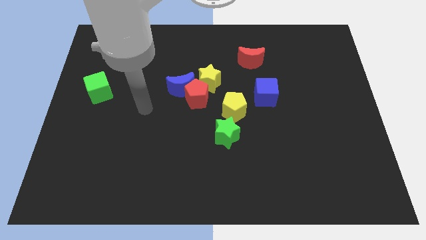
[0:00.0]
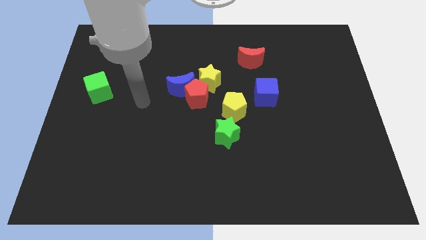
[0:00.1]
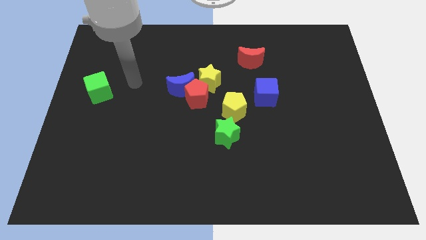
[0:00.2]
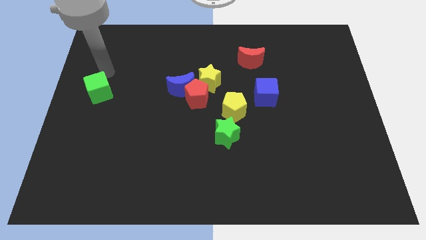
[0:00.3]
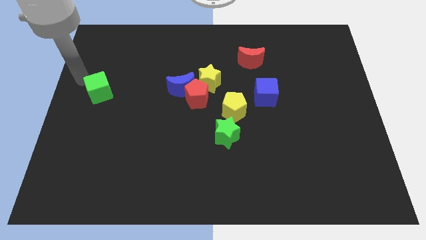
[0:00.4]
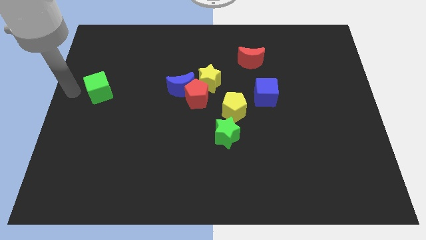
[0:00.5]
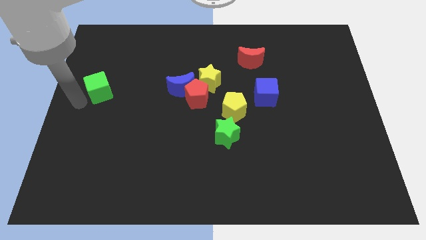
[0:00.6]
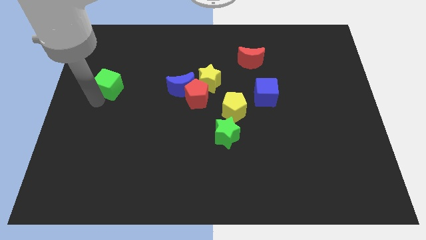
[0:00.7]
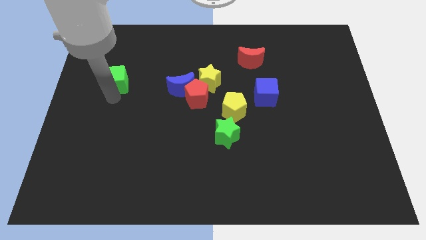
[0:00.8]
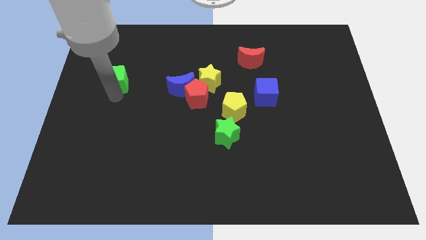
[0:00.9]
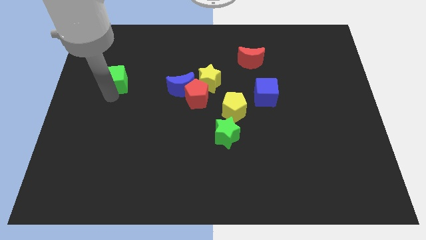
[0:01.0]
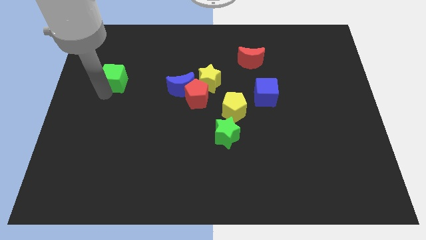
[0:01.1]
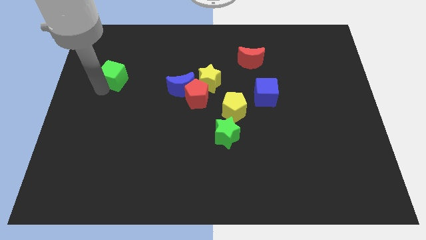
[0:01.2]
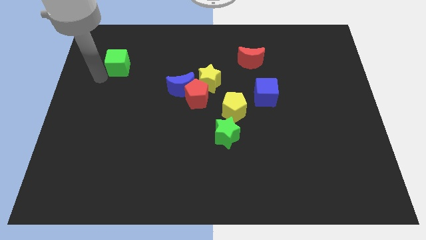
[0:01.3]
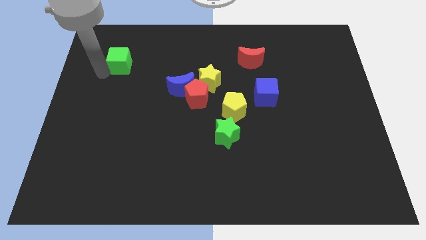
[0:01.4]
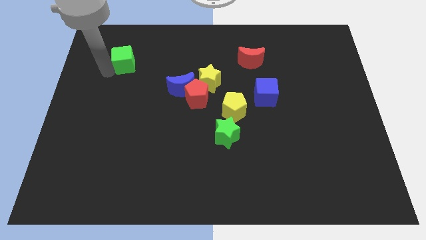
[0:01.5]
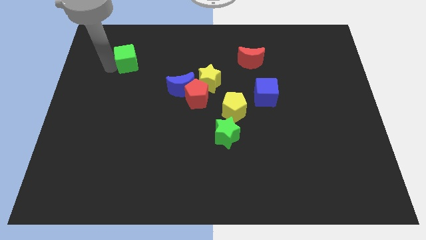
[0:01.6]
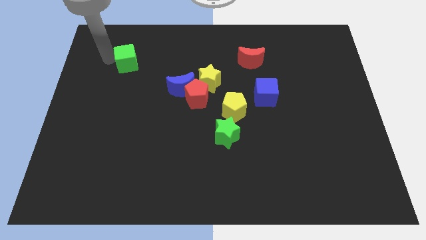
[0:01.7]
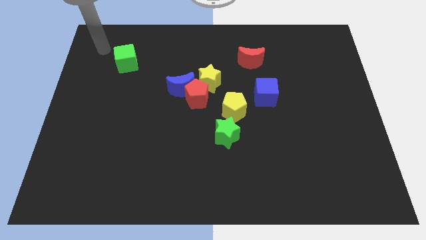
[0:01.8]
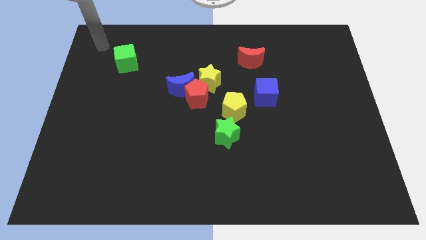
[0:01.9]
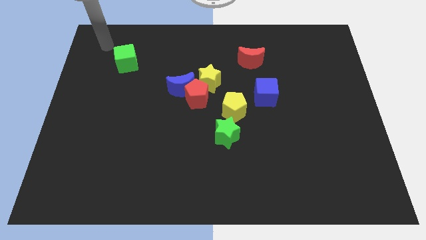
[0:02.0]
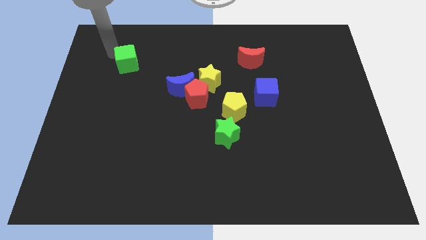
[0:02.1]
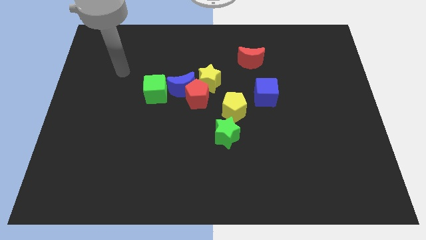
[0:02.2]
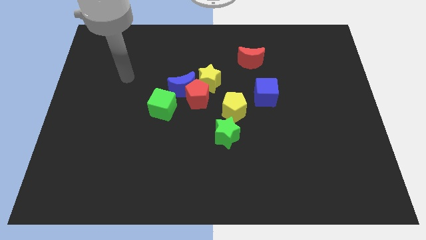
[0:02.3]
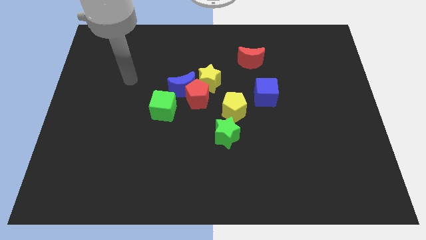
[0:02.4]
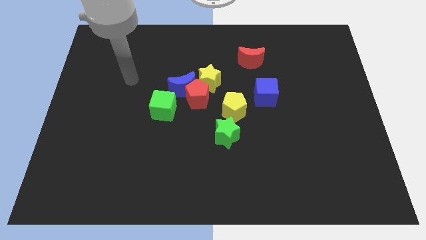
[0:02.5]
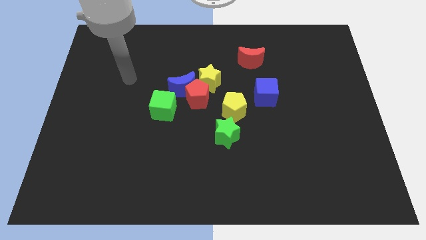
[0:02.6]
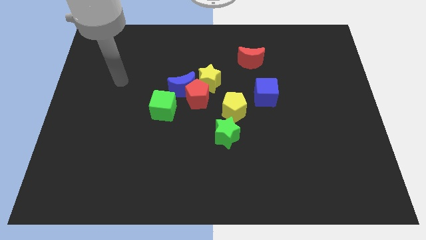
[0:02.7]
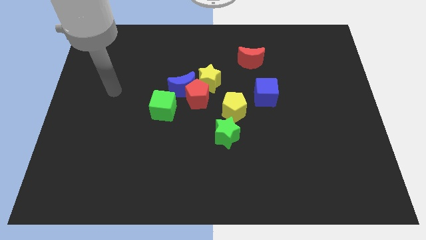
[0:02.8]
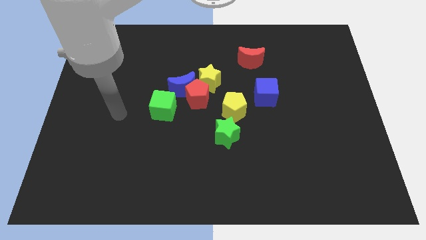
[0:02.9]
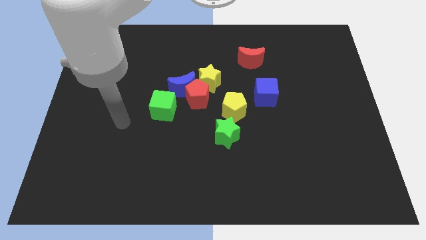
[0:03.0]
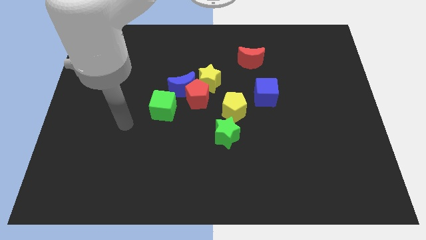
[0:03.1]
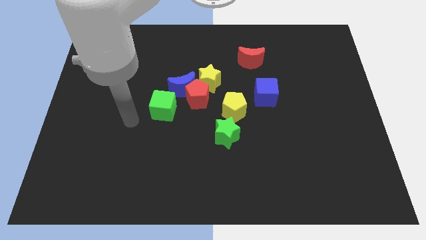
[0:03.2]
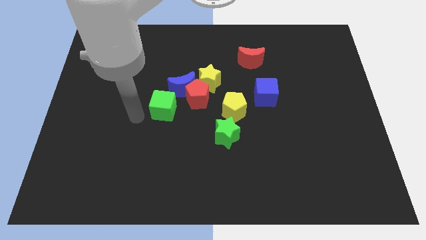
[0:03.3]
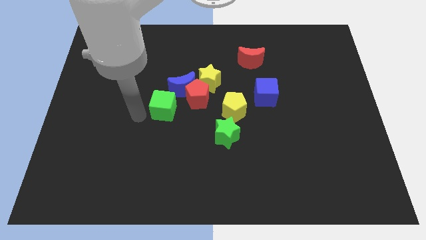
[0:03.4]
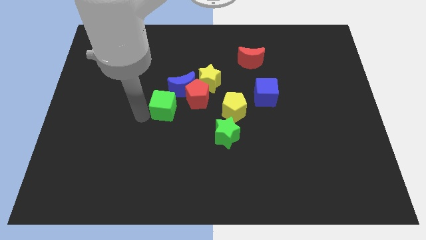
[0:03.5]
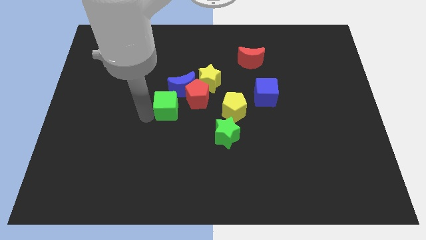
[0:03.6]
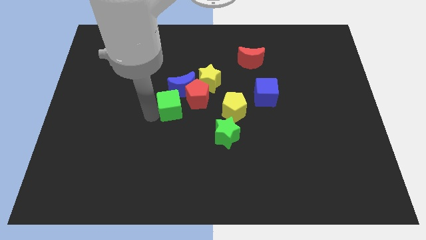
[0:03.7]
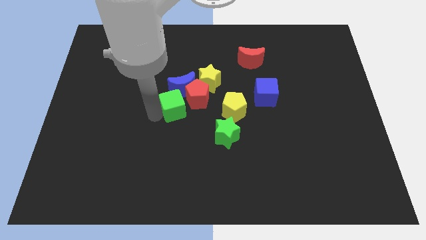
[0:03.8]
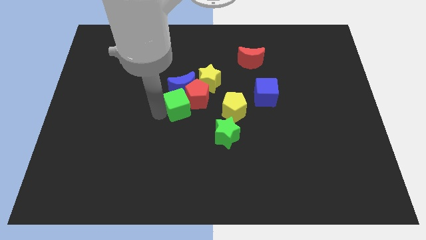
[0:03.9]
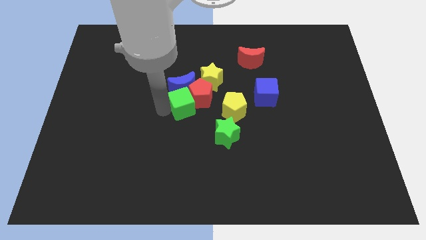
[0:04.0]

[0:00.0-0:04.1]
move the green cube close to the blue moon

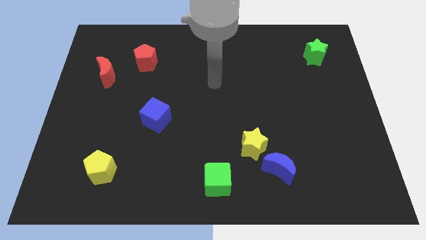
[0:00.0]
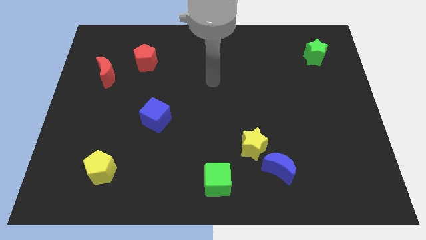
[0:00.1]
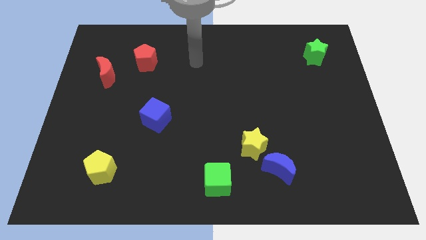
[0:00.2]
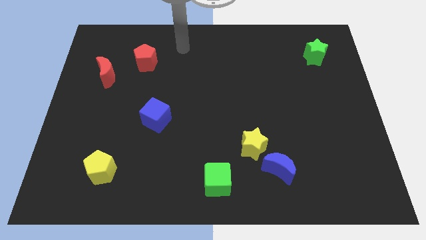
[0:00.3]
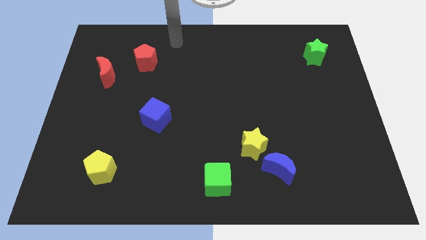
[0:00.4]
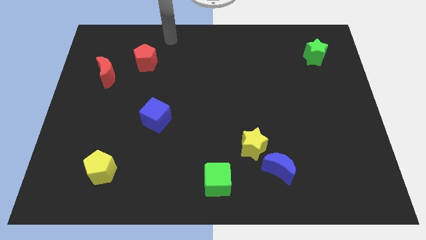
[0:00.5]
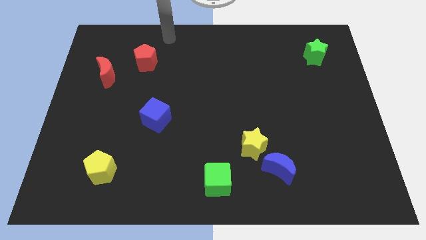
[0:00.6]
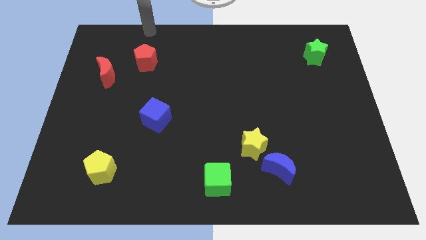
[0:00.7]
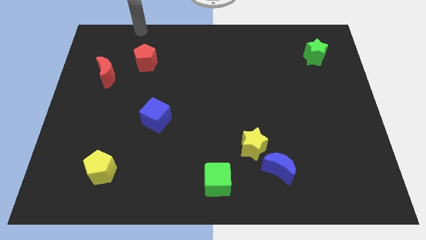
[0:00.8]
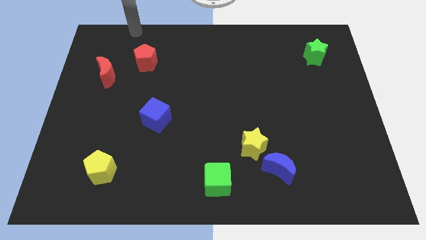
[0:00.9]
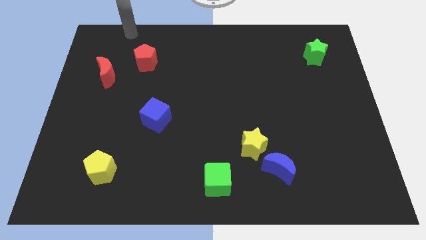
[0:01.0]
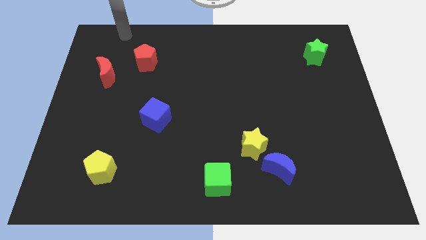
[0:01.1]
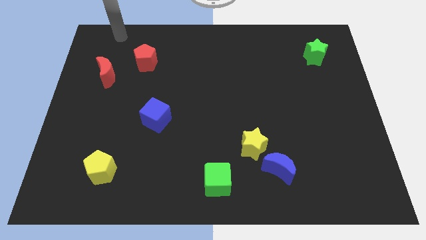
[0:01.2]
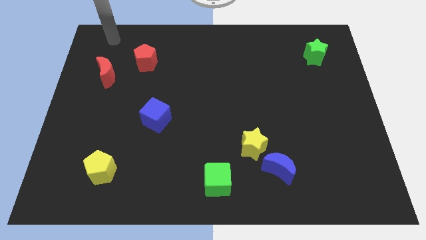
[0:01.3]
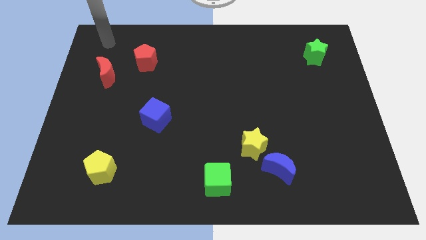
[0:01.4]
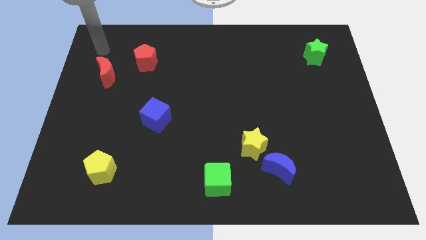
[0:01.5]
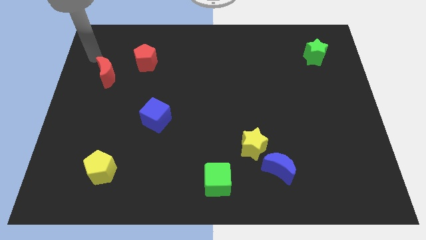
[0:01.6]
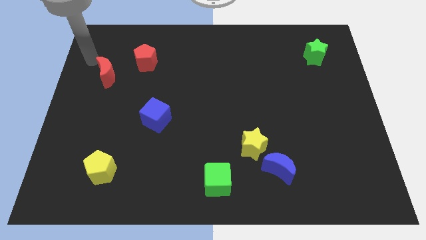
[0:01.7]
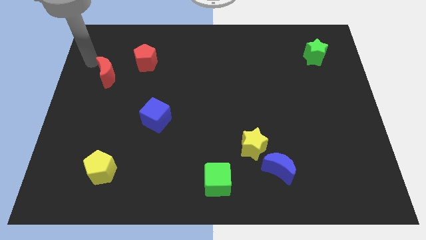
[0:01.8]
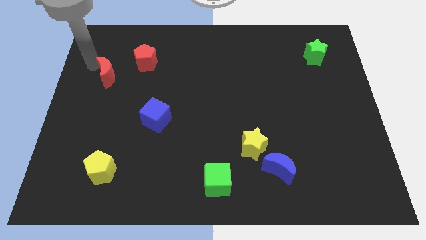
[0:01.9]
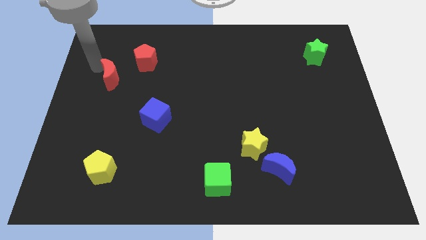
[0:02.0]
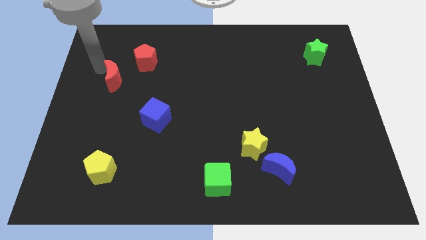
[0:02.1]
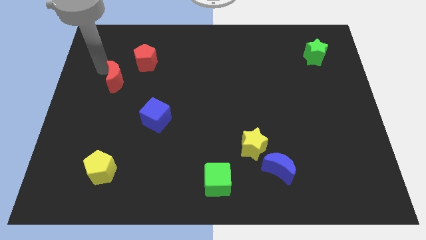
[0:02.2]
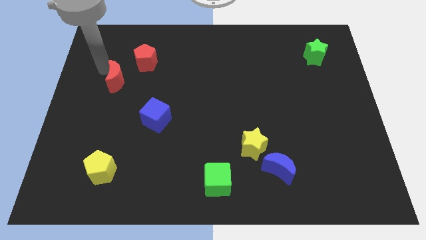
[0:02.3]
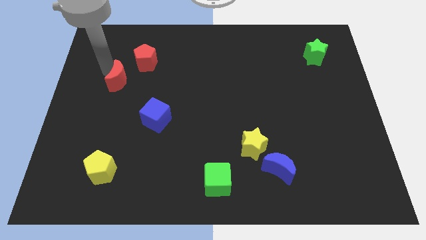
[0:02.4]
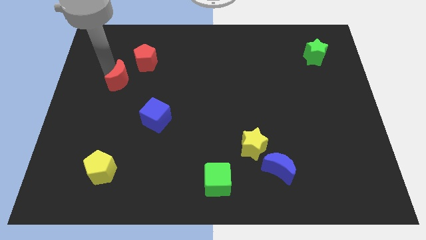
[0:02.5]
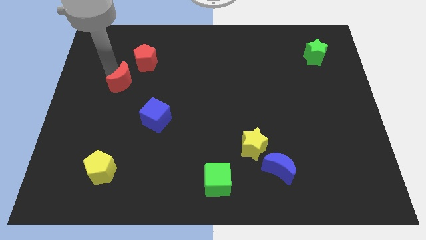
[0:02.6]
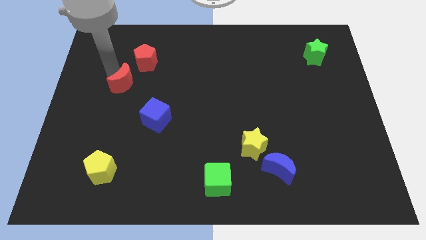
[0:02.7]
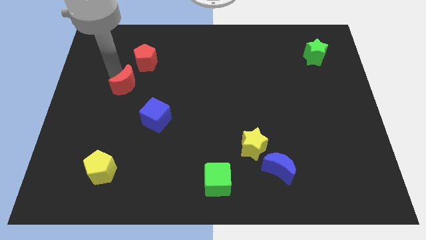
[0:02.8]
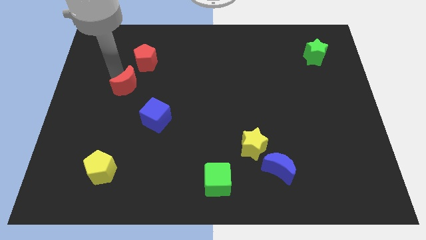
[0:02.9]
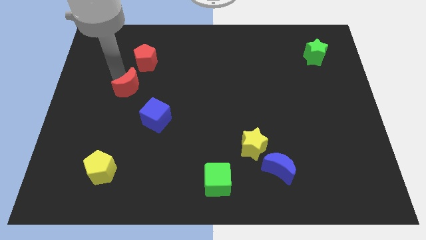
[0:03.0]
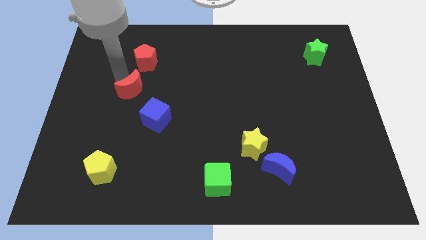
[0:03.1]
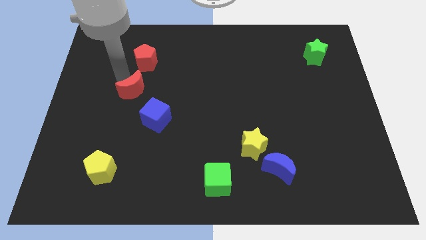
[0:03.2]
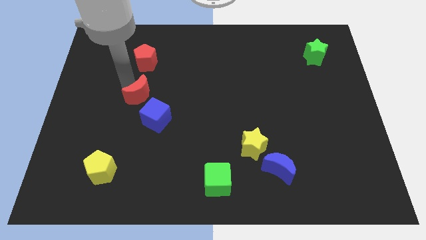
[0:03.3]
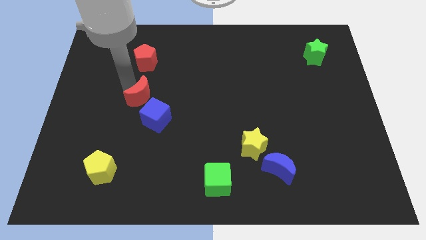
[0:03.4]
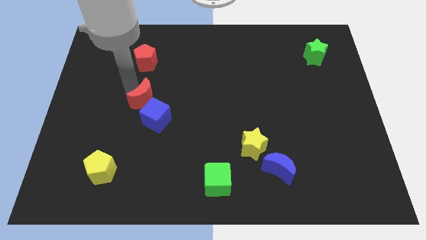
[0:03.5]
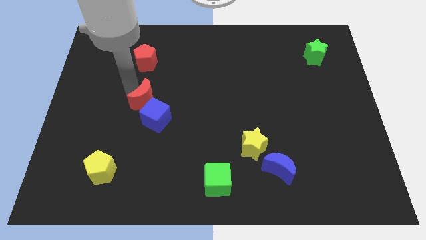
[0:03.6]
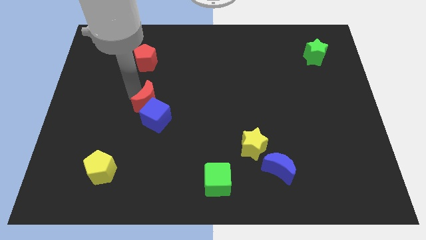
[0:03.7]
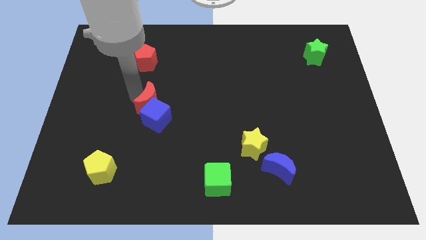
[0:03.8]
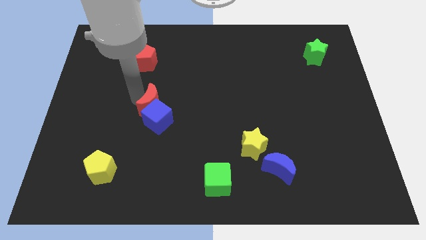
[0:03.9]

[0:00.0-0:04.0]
push the red moon to the blue cube

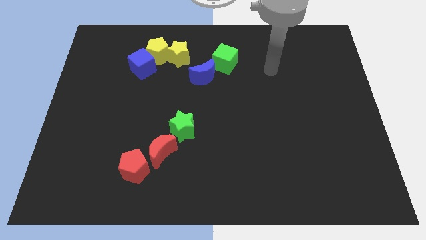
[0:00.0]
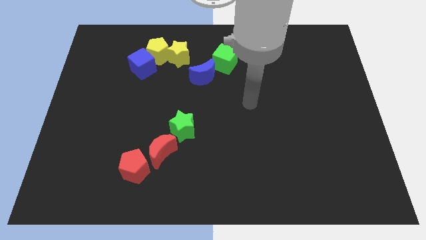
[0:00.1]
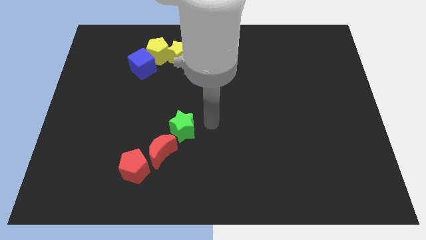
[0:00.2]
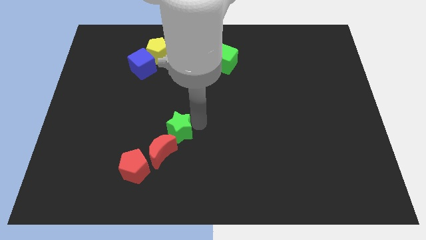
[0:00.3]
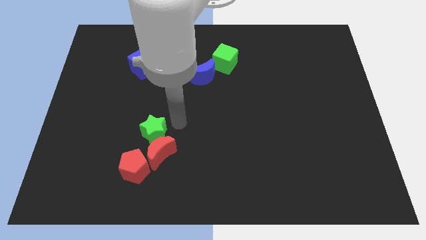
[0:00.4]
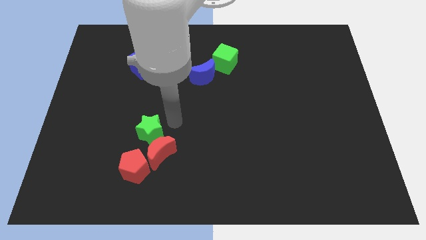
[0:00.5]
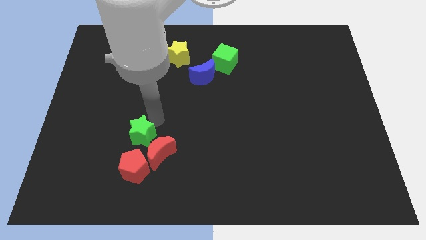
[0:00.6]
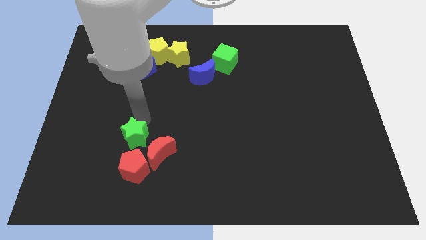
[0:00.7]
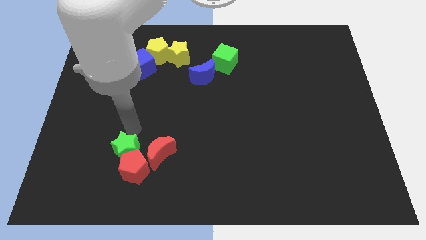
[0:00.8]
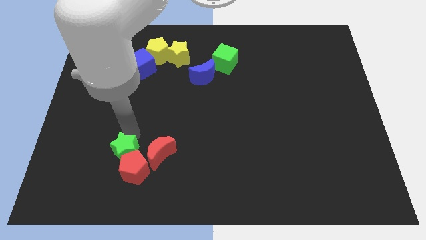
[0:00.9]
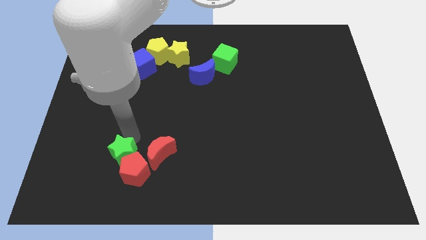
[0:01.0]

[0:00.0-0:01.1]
put the green star towards the red pentagon
